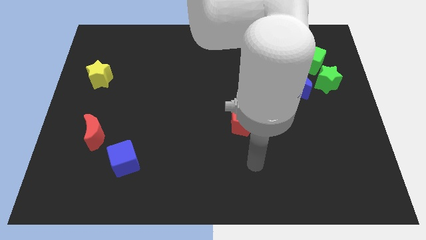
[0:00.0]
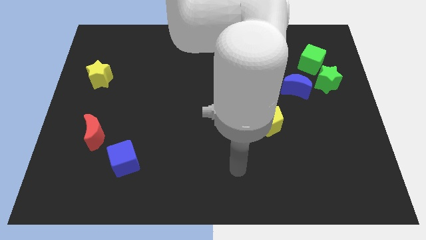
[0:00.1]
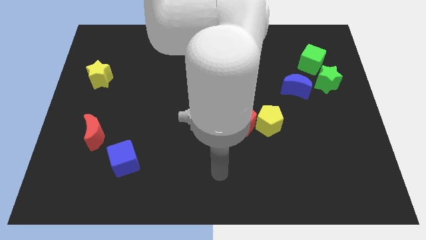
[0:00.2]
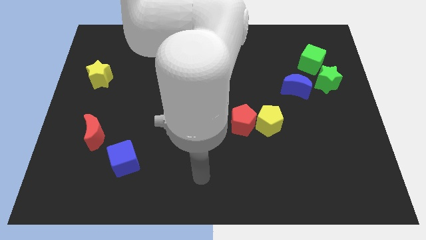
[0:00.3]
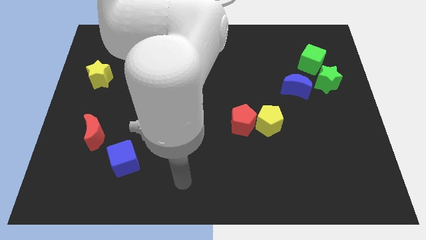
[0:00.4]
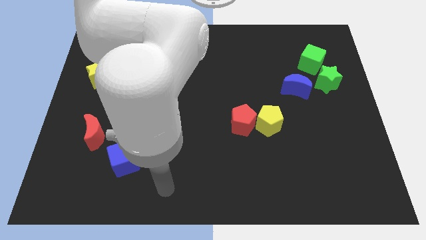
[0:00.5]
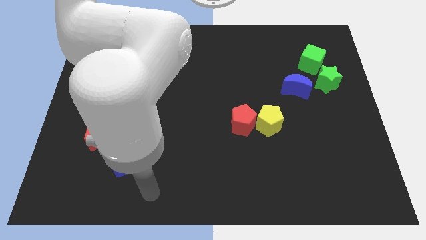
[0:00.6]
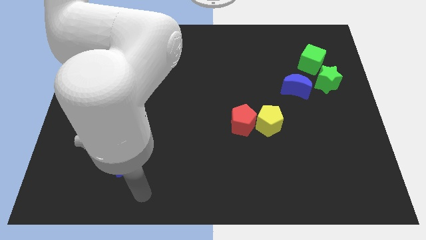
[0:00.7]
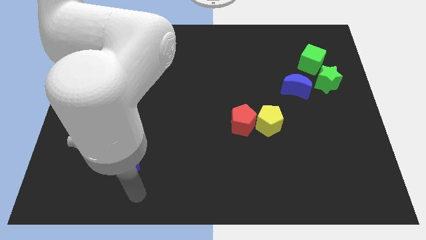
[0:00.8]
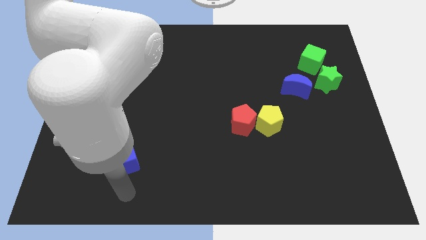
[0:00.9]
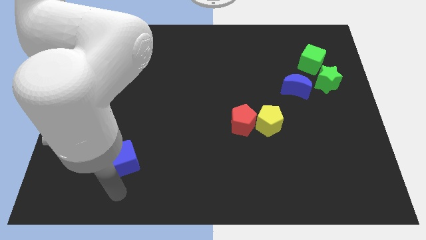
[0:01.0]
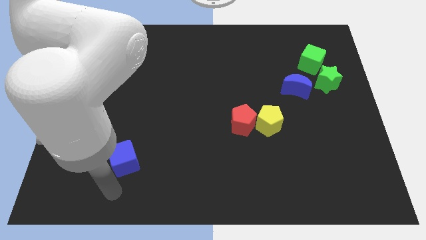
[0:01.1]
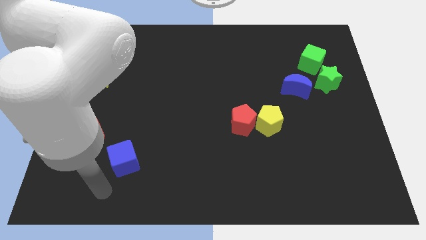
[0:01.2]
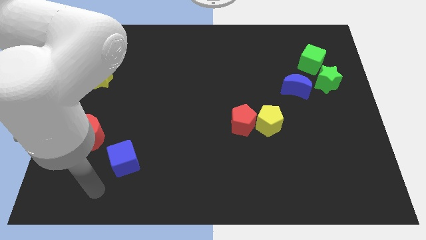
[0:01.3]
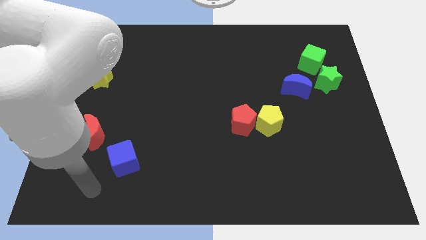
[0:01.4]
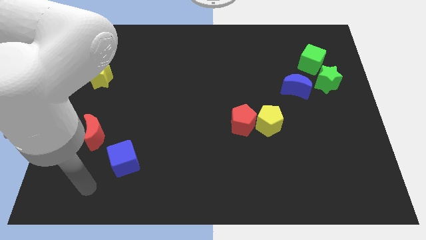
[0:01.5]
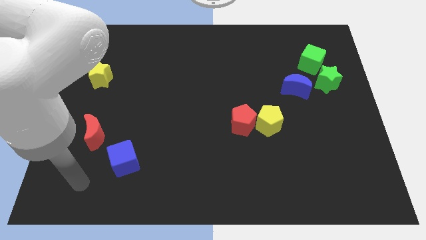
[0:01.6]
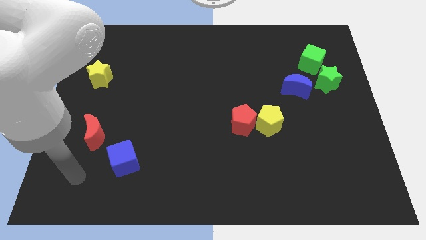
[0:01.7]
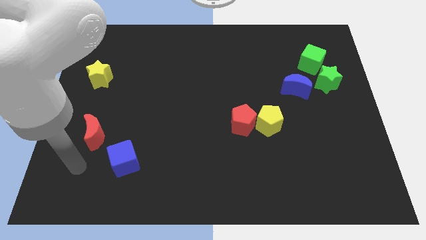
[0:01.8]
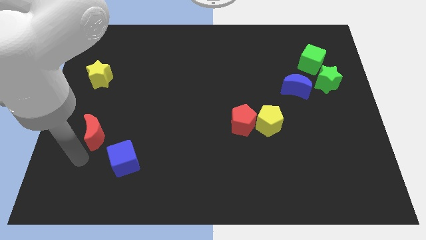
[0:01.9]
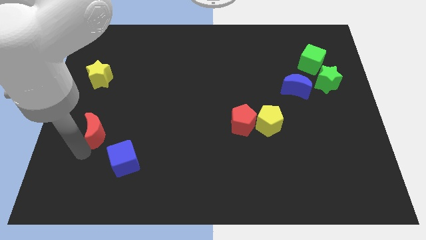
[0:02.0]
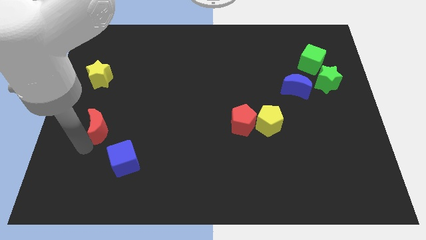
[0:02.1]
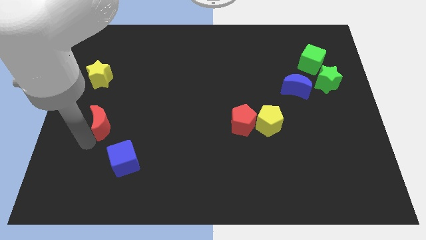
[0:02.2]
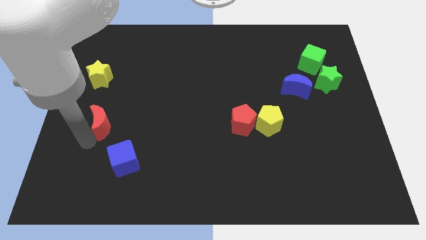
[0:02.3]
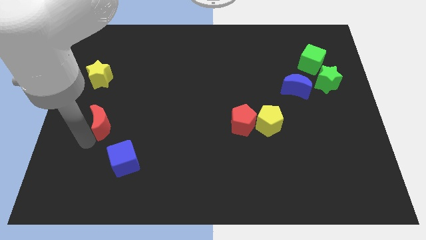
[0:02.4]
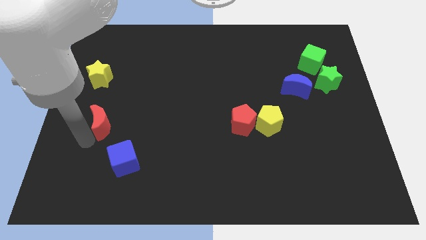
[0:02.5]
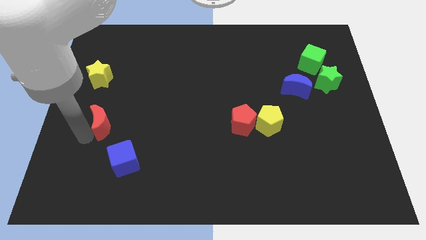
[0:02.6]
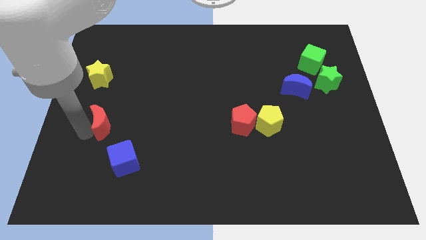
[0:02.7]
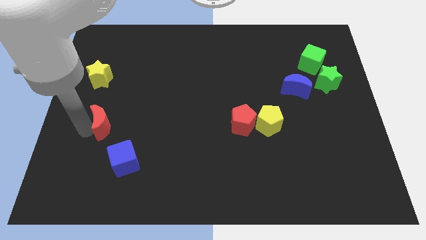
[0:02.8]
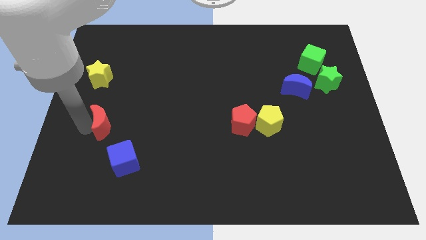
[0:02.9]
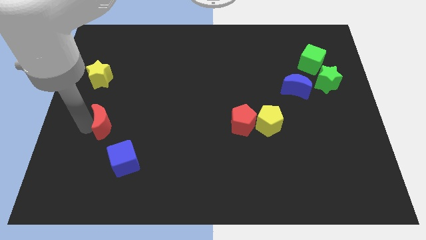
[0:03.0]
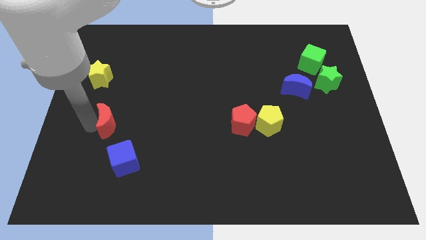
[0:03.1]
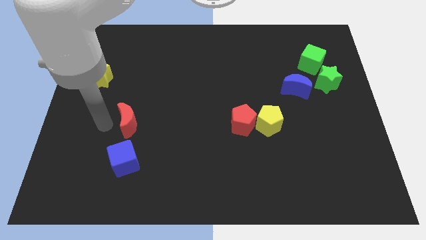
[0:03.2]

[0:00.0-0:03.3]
place the red crescent to the top side of the blue cube

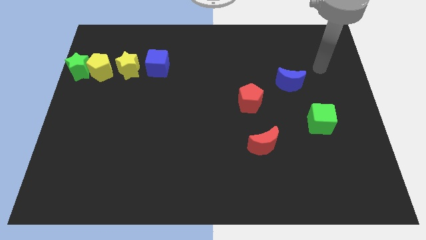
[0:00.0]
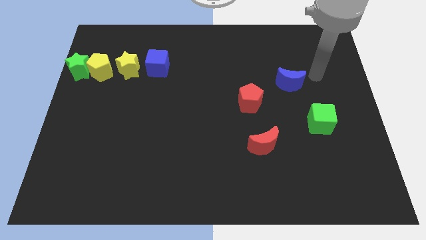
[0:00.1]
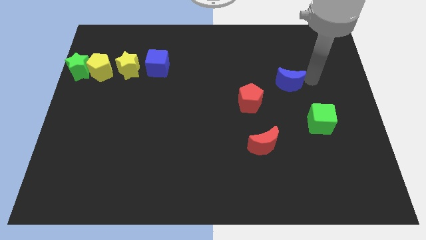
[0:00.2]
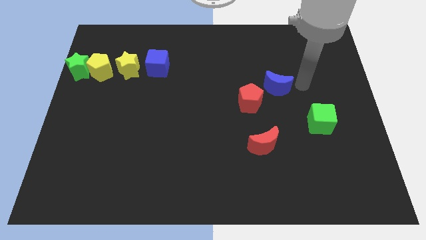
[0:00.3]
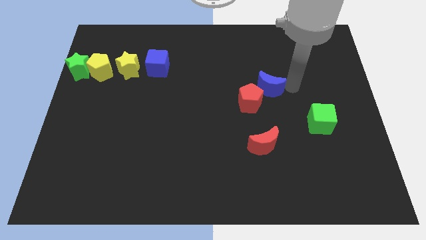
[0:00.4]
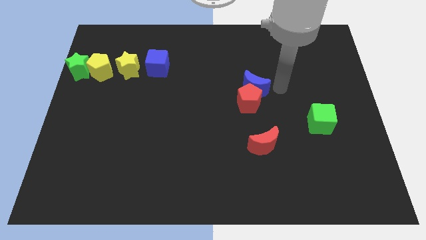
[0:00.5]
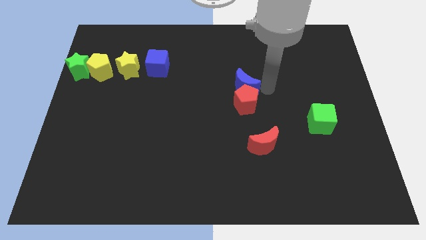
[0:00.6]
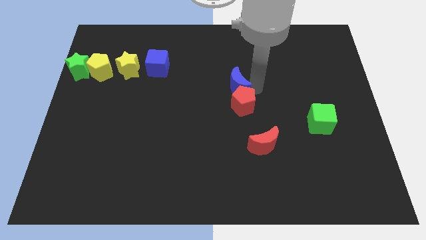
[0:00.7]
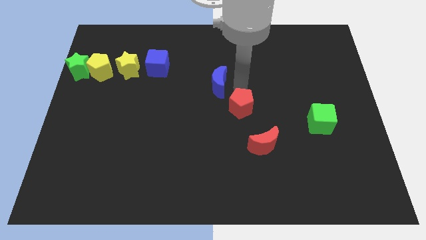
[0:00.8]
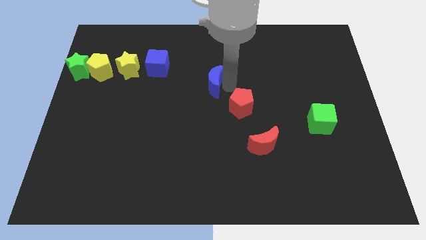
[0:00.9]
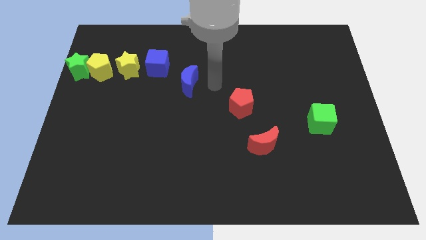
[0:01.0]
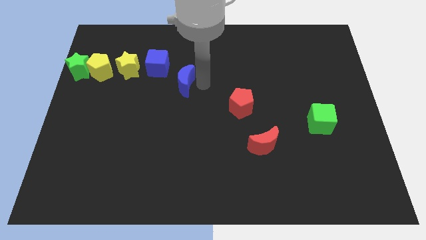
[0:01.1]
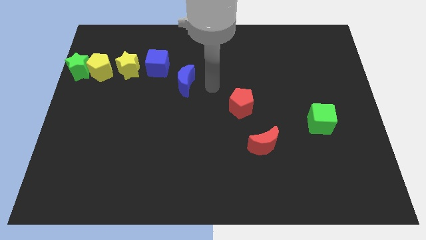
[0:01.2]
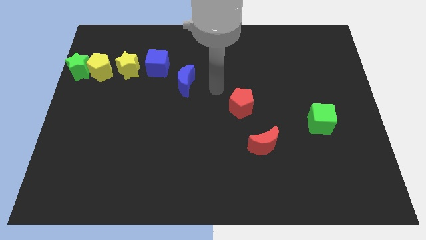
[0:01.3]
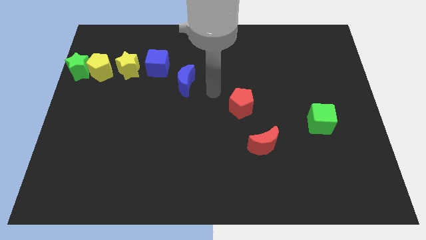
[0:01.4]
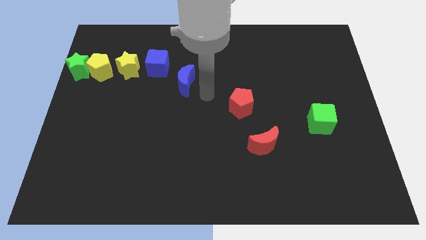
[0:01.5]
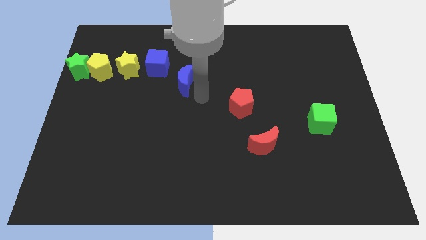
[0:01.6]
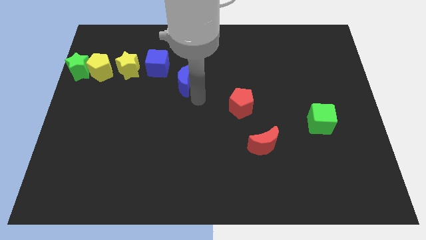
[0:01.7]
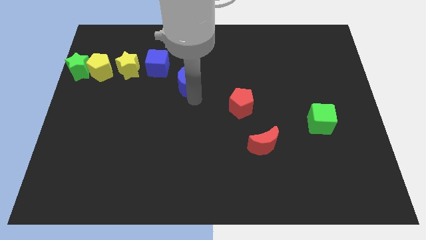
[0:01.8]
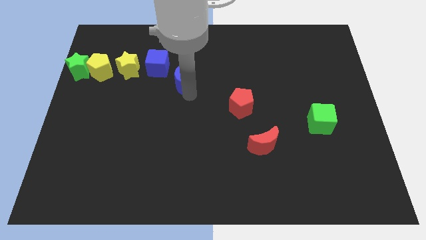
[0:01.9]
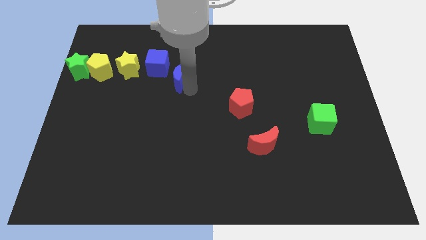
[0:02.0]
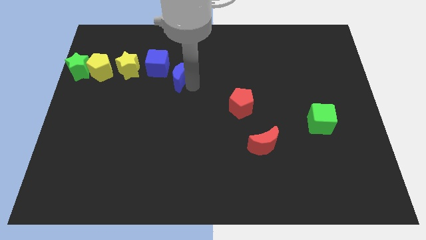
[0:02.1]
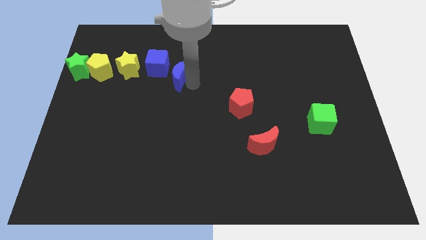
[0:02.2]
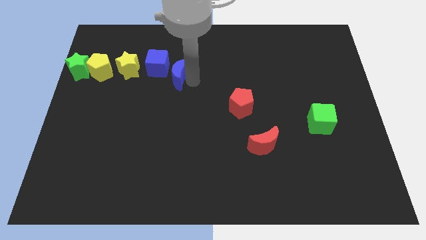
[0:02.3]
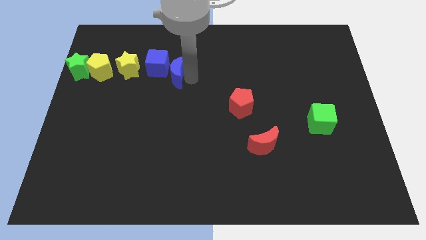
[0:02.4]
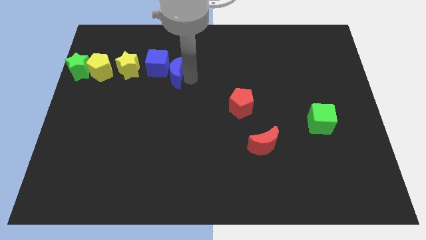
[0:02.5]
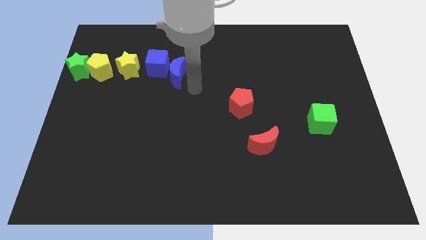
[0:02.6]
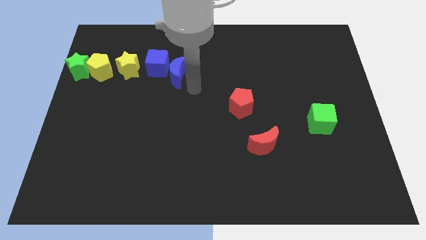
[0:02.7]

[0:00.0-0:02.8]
push the blue crescent to the right of the blue cube

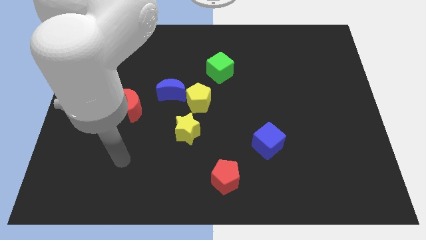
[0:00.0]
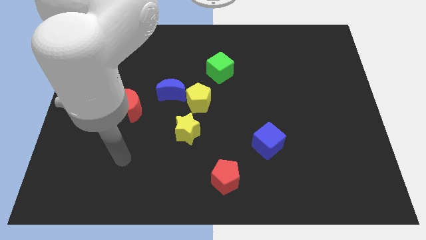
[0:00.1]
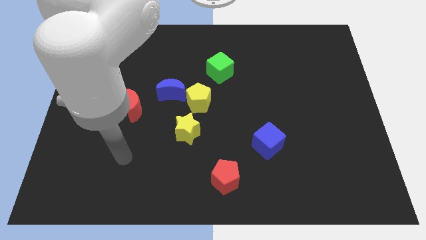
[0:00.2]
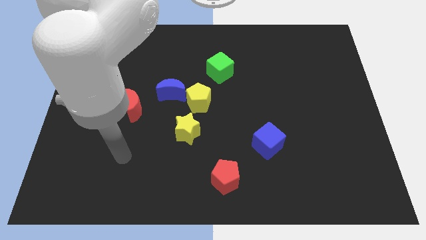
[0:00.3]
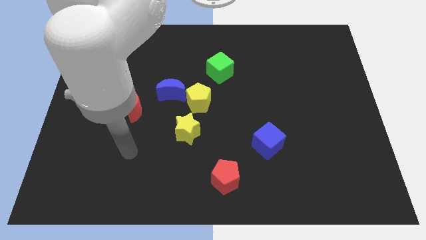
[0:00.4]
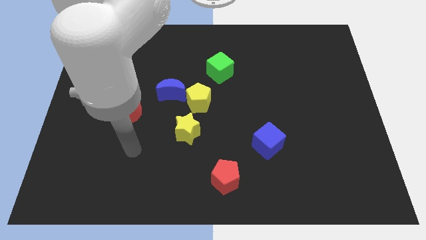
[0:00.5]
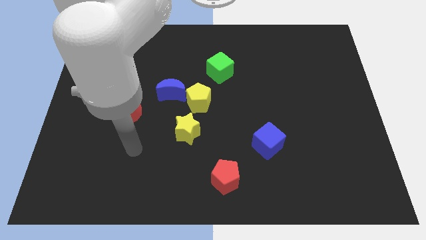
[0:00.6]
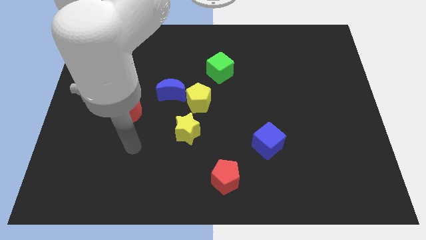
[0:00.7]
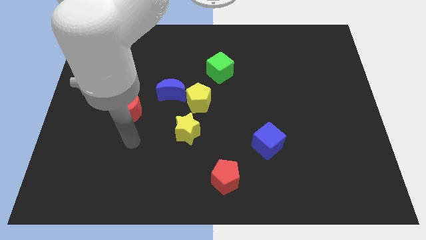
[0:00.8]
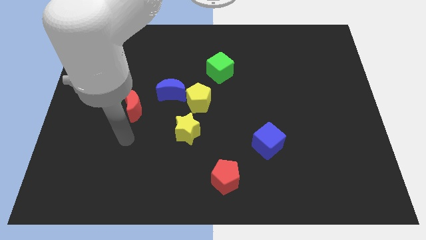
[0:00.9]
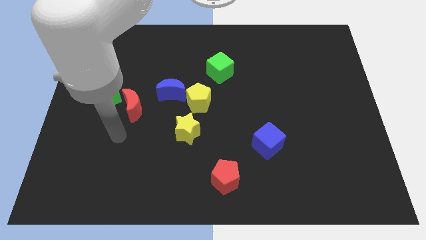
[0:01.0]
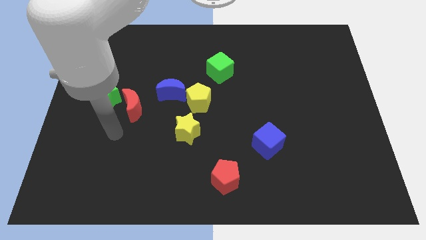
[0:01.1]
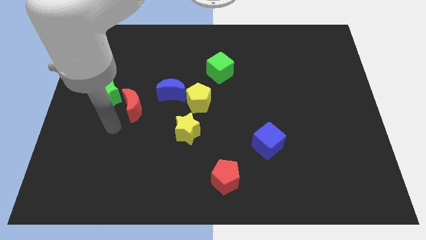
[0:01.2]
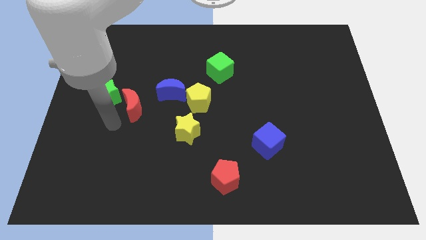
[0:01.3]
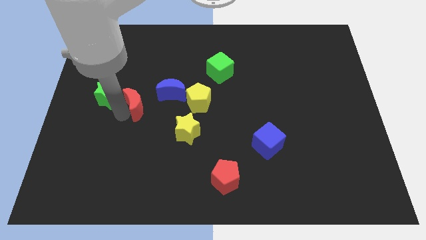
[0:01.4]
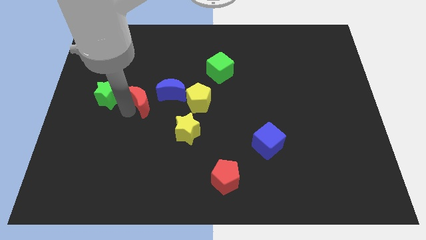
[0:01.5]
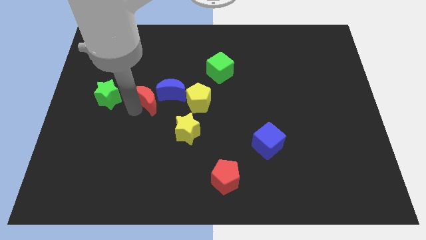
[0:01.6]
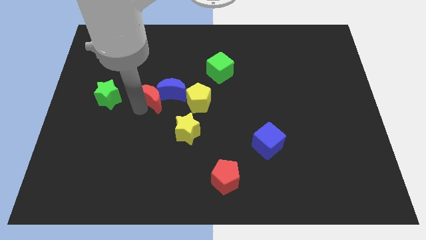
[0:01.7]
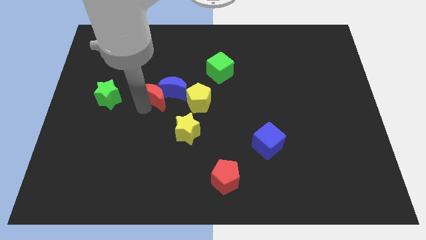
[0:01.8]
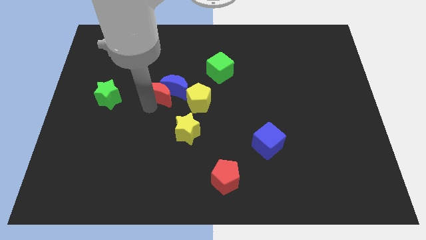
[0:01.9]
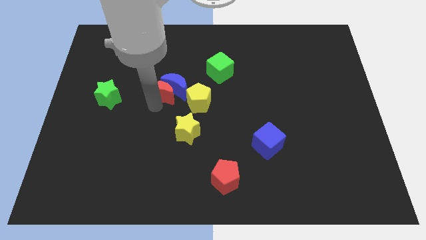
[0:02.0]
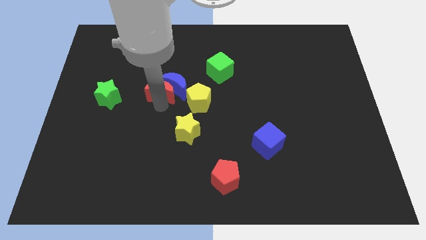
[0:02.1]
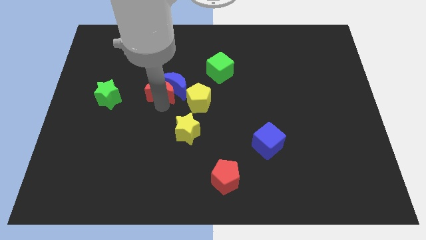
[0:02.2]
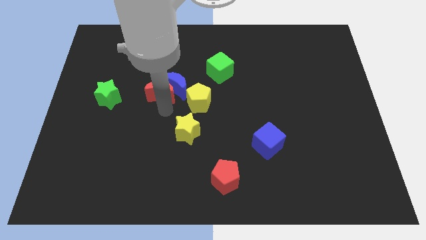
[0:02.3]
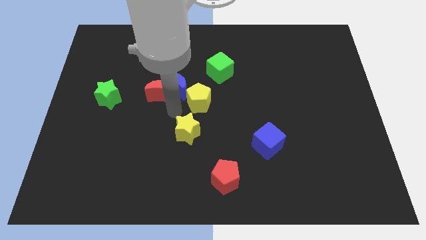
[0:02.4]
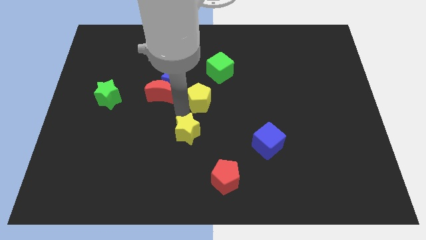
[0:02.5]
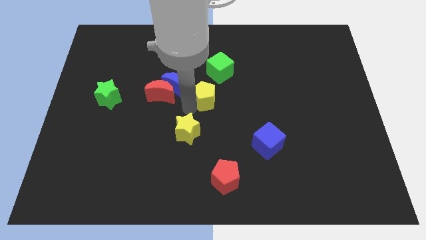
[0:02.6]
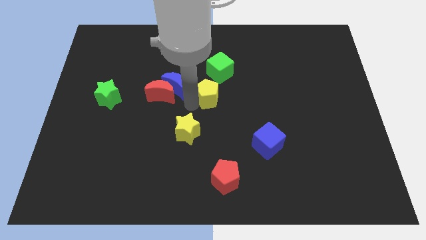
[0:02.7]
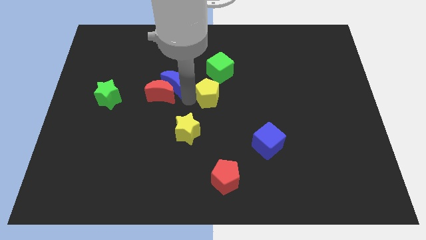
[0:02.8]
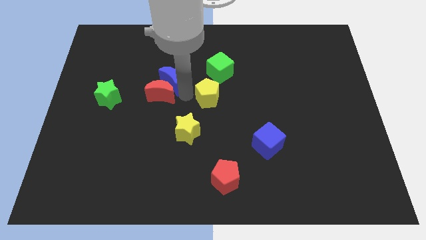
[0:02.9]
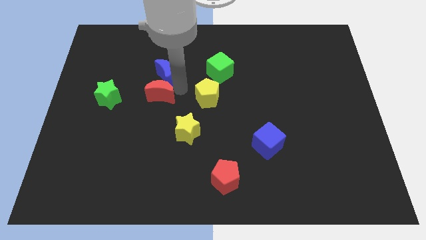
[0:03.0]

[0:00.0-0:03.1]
move the red crescent away from the green star
